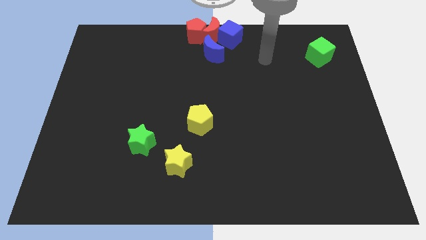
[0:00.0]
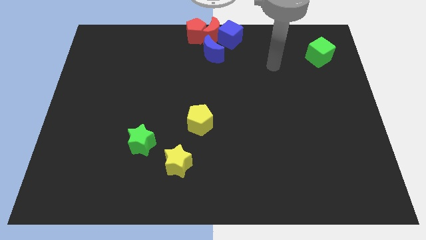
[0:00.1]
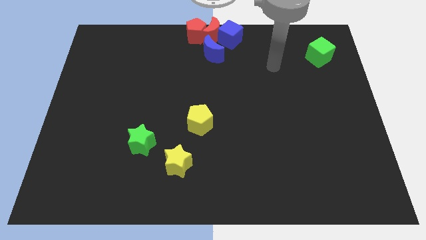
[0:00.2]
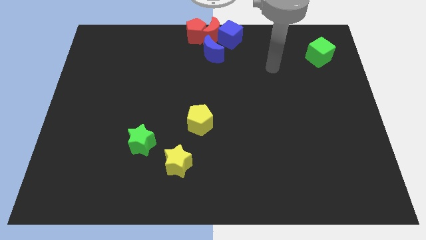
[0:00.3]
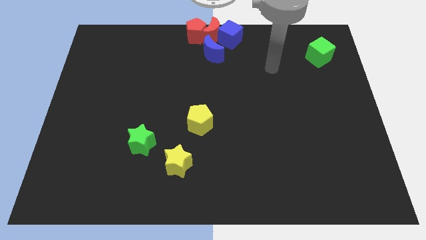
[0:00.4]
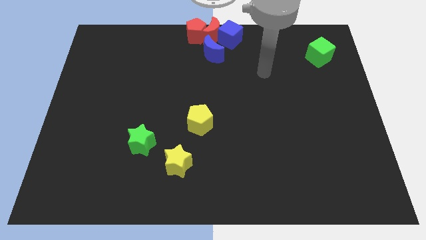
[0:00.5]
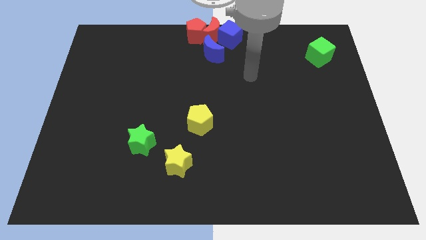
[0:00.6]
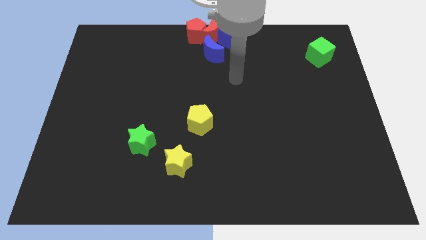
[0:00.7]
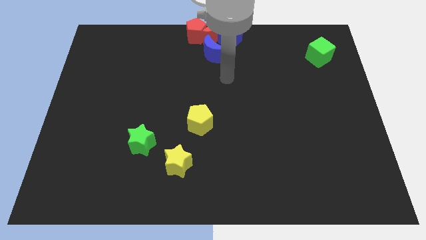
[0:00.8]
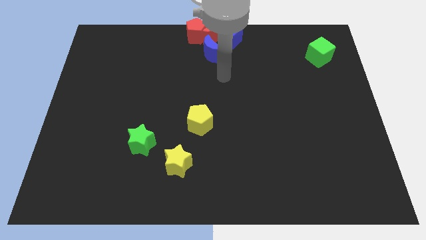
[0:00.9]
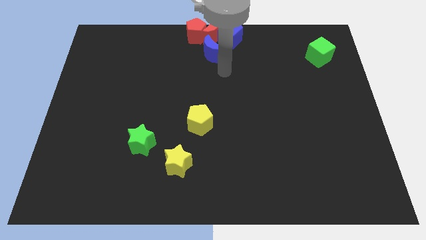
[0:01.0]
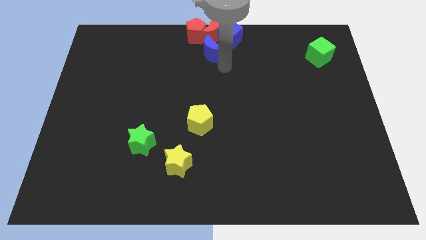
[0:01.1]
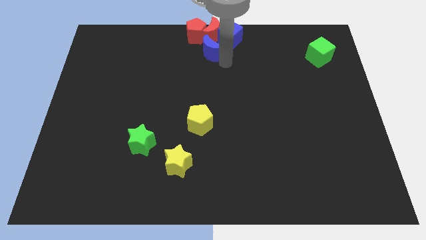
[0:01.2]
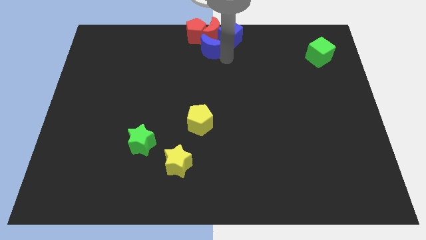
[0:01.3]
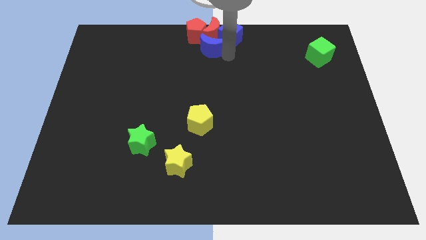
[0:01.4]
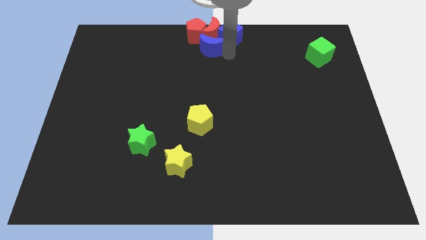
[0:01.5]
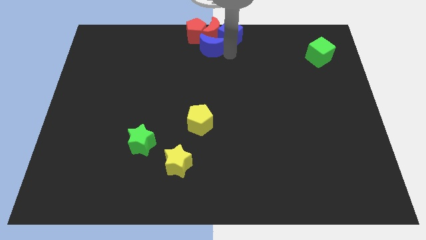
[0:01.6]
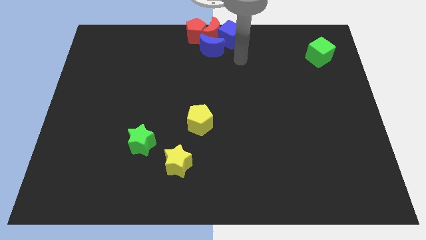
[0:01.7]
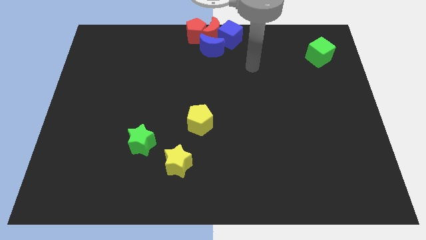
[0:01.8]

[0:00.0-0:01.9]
push the blue moon into the red moon

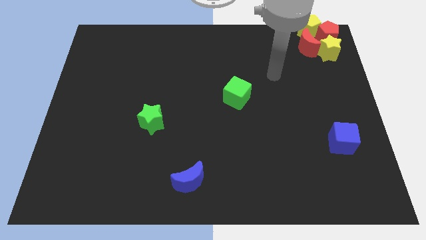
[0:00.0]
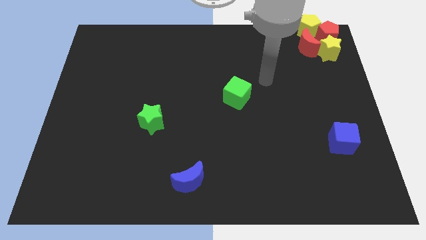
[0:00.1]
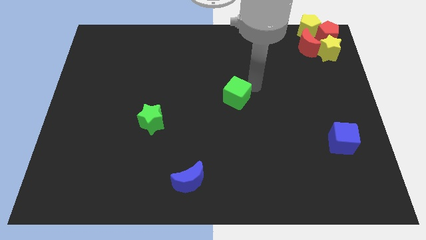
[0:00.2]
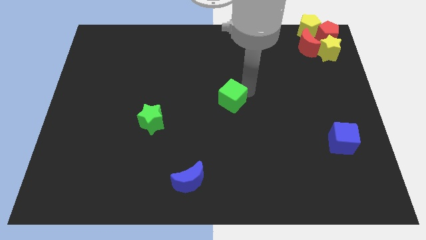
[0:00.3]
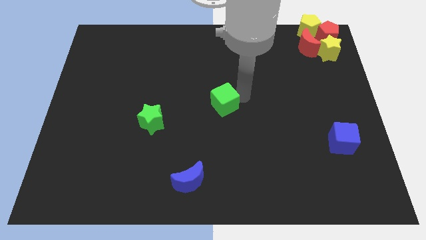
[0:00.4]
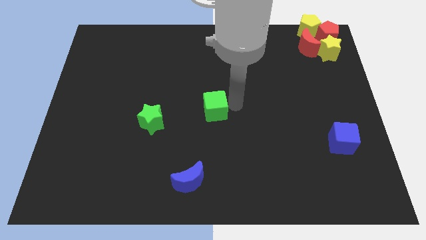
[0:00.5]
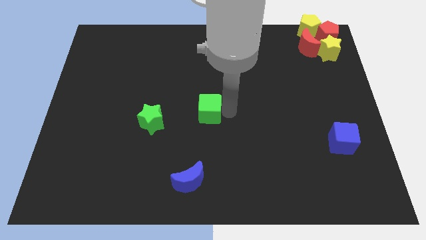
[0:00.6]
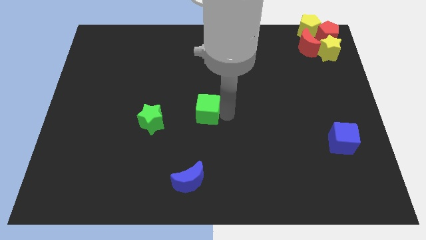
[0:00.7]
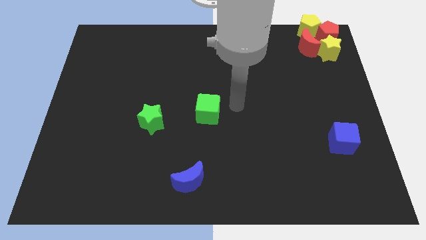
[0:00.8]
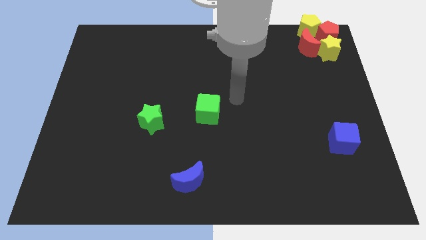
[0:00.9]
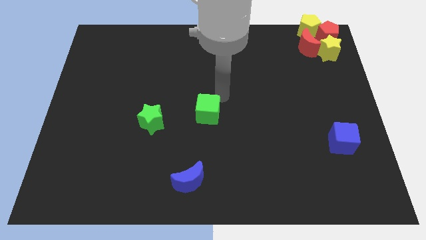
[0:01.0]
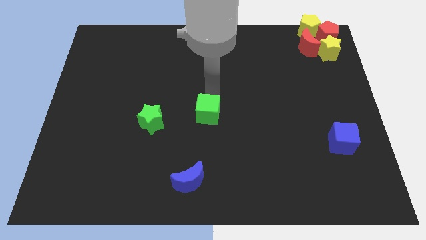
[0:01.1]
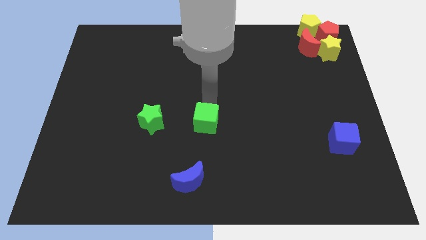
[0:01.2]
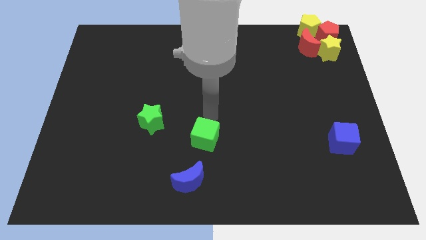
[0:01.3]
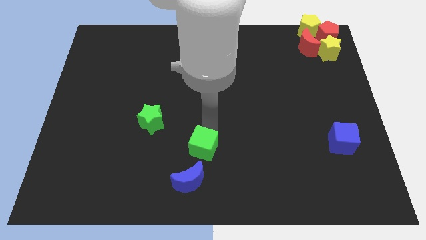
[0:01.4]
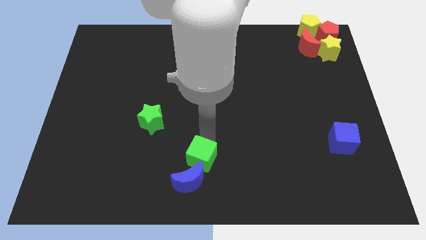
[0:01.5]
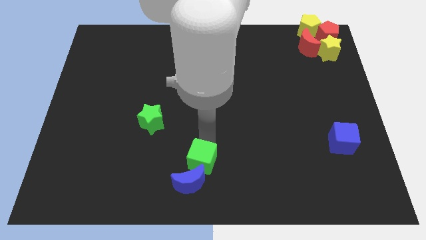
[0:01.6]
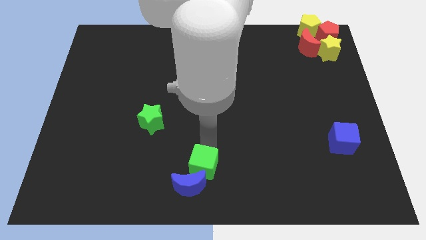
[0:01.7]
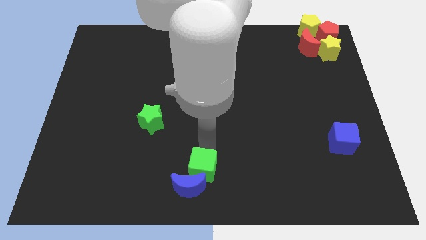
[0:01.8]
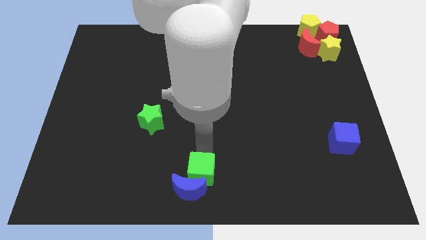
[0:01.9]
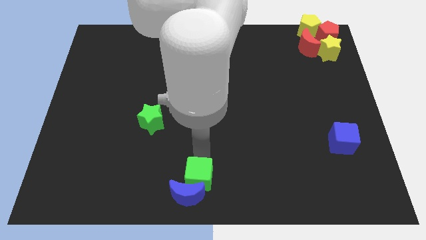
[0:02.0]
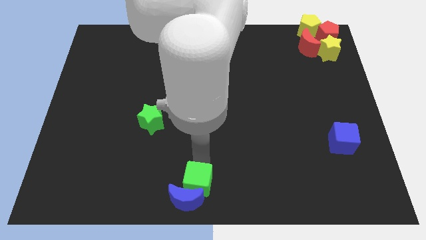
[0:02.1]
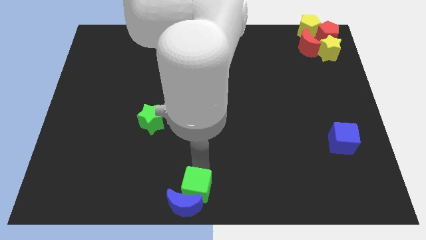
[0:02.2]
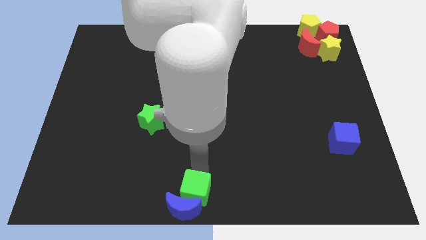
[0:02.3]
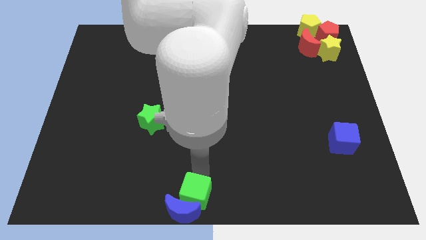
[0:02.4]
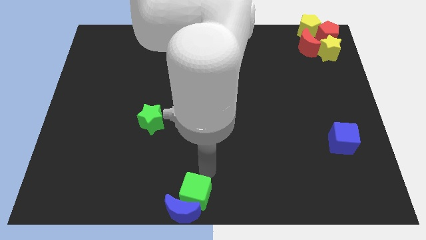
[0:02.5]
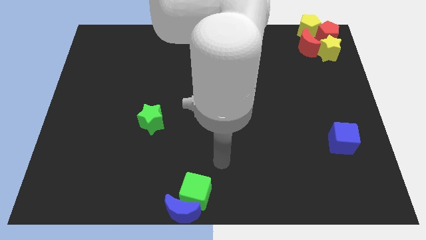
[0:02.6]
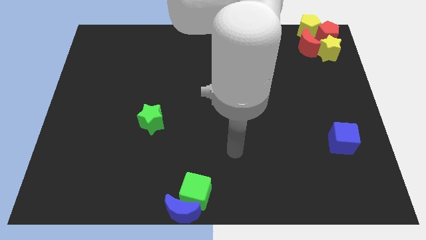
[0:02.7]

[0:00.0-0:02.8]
move the green cube towards the bottom center of the board

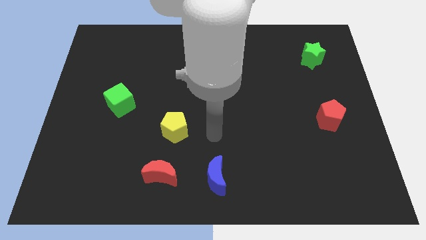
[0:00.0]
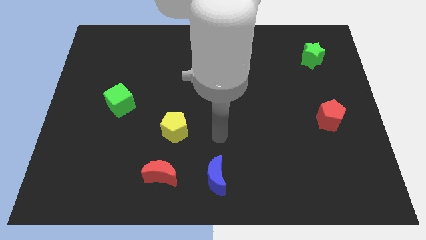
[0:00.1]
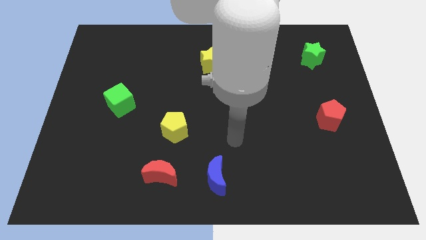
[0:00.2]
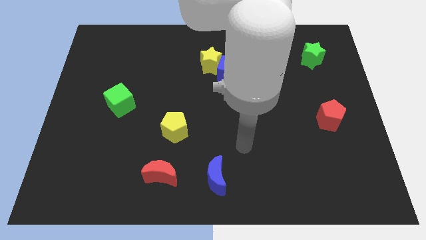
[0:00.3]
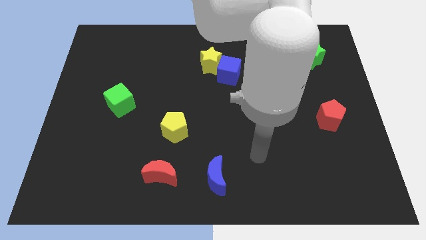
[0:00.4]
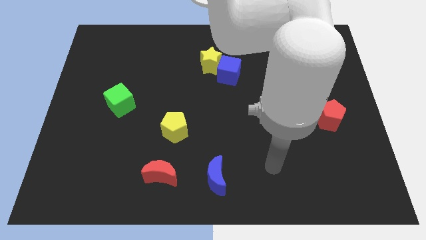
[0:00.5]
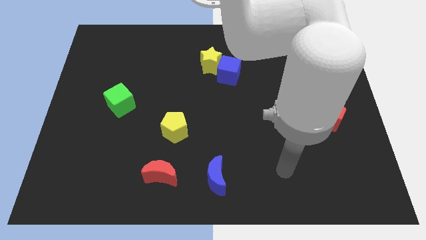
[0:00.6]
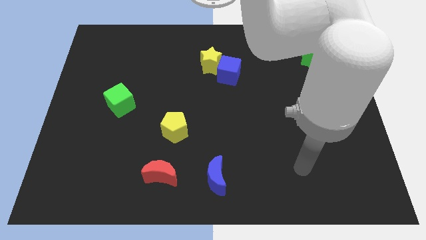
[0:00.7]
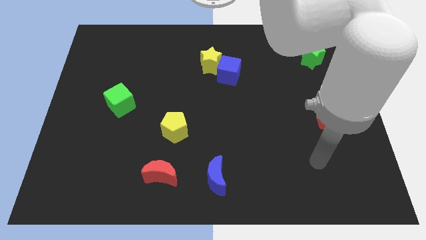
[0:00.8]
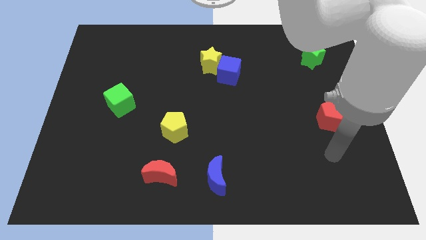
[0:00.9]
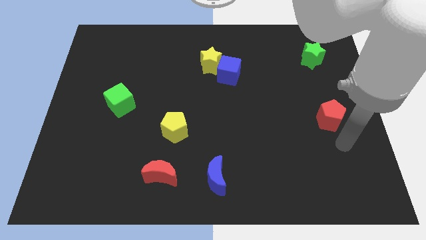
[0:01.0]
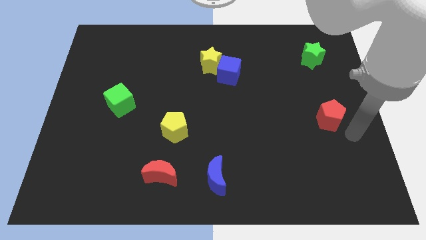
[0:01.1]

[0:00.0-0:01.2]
move your arm close to the red pentagon

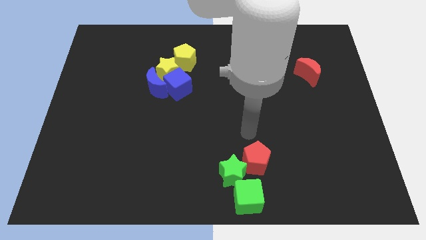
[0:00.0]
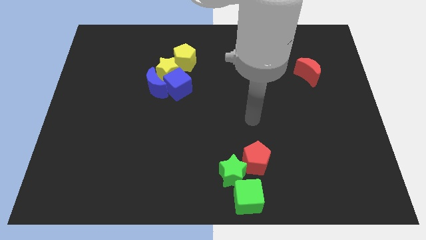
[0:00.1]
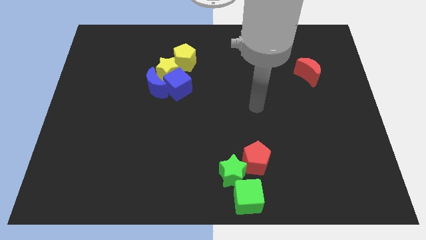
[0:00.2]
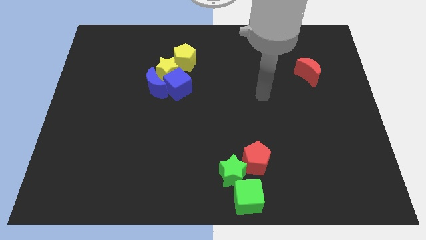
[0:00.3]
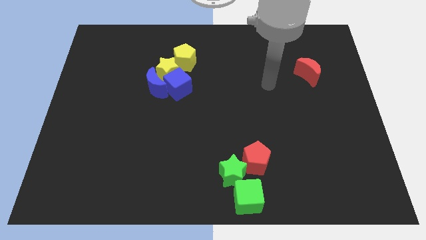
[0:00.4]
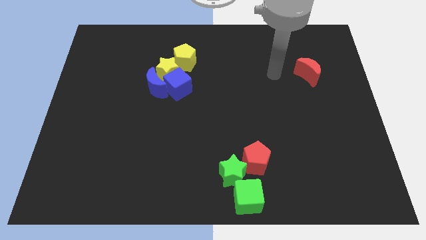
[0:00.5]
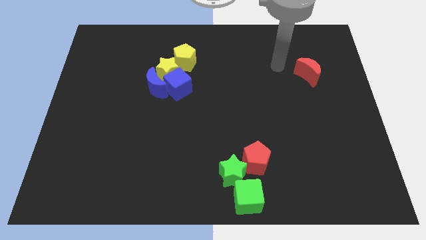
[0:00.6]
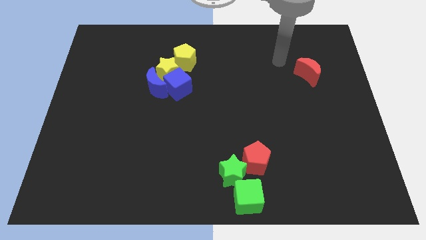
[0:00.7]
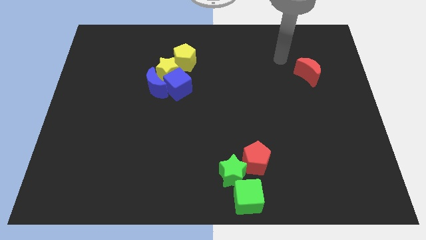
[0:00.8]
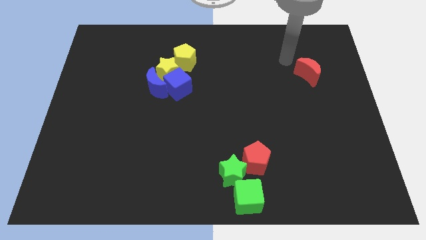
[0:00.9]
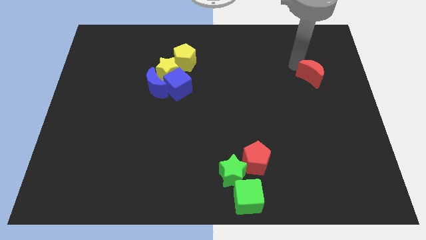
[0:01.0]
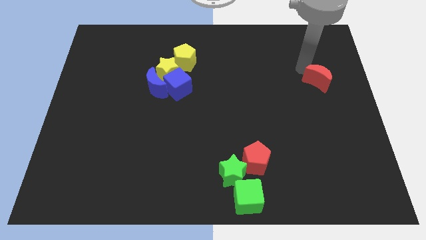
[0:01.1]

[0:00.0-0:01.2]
move the red moon slightly to the right side

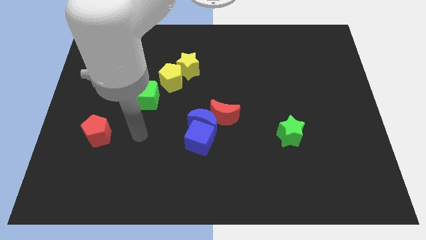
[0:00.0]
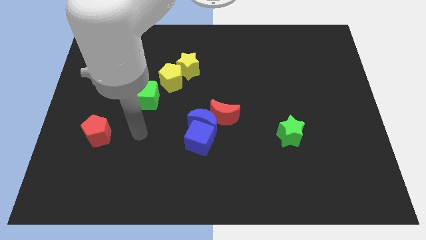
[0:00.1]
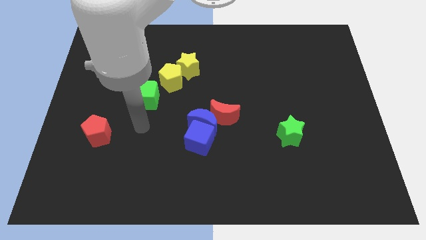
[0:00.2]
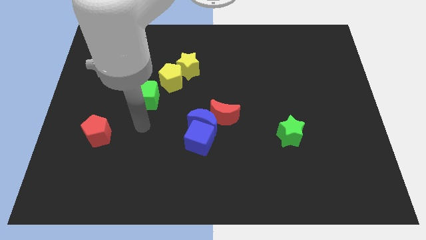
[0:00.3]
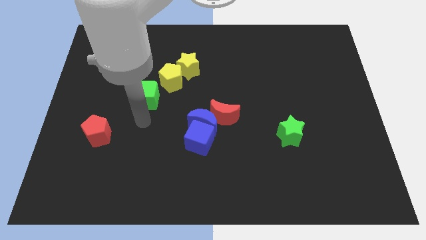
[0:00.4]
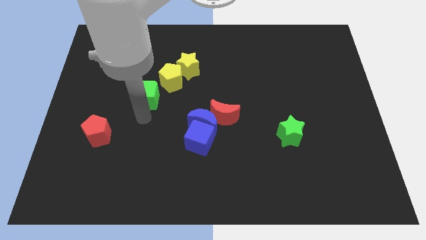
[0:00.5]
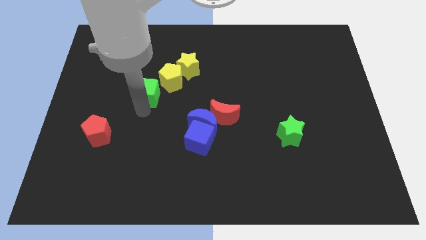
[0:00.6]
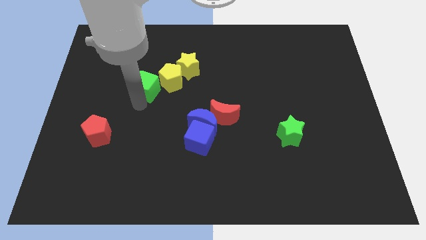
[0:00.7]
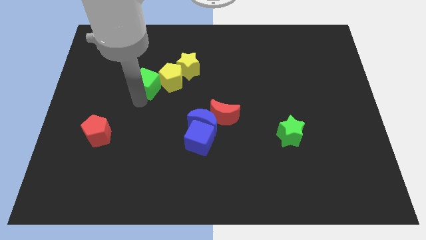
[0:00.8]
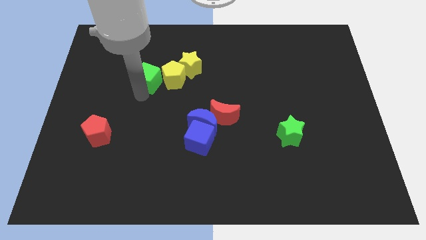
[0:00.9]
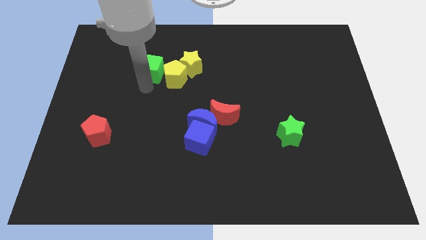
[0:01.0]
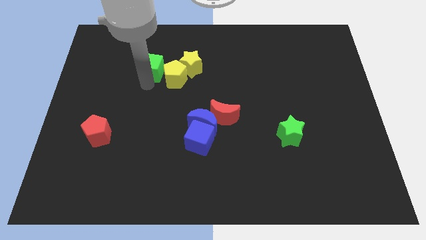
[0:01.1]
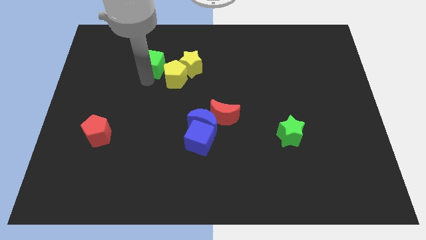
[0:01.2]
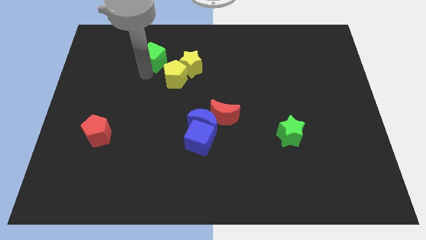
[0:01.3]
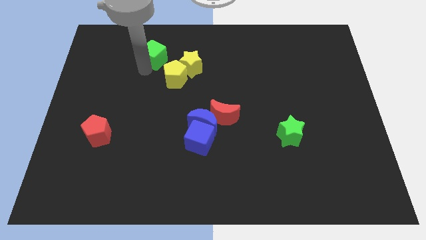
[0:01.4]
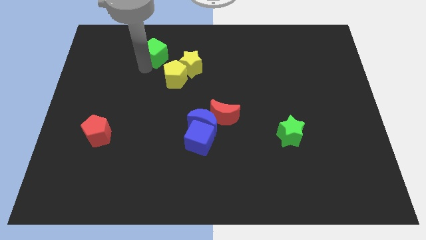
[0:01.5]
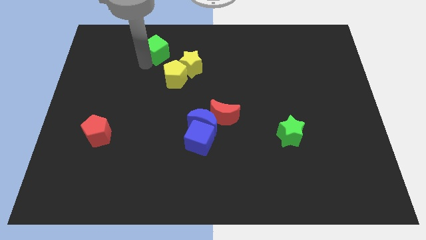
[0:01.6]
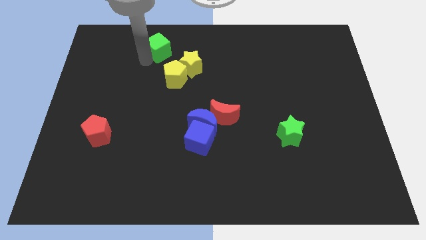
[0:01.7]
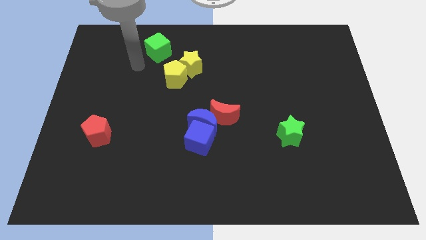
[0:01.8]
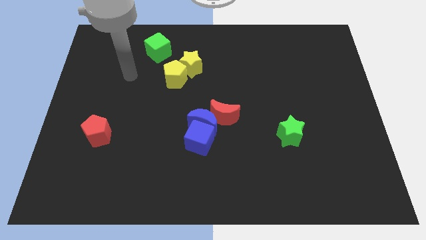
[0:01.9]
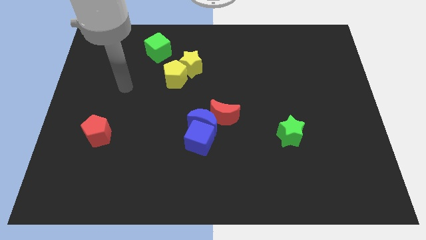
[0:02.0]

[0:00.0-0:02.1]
slide the green cube slightly upwards
